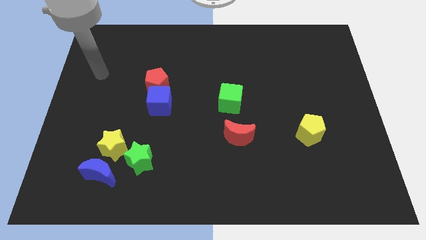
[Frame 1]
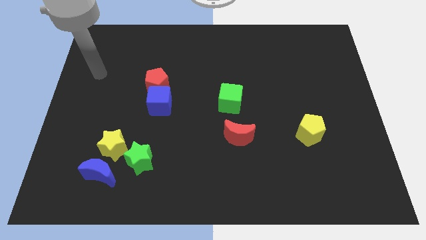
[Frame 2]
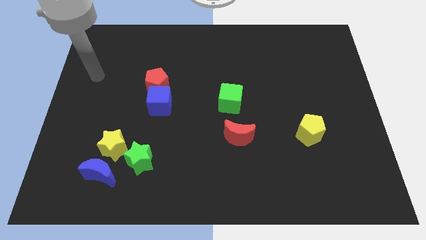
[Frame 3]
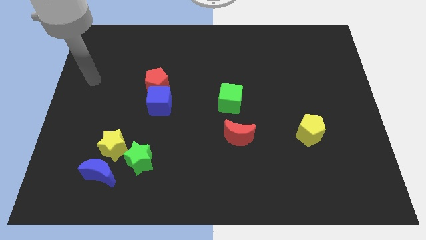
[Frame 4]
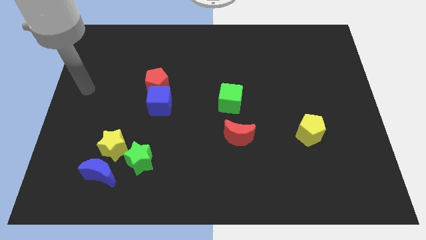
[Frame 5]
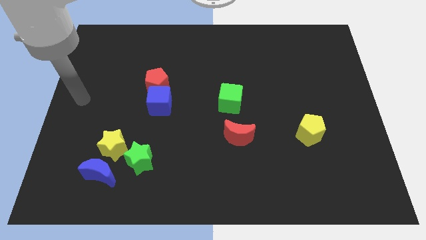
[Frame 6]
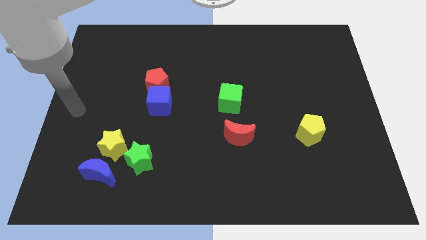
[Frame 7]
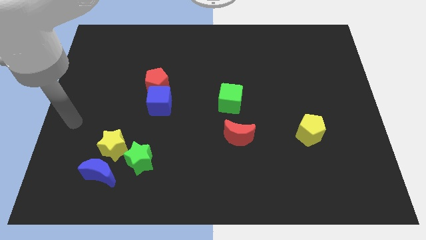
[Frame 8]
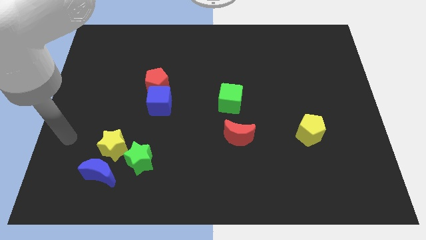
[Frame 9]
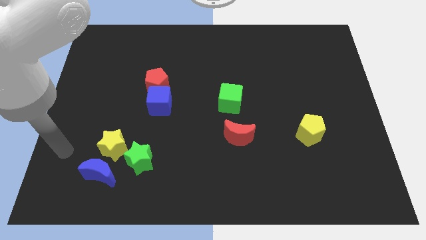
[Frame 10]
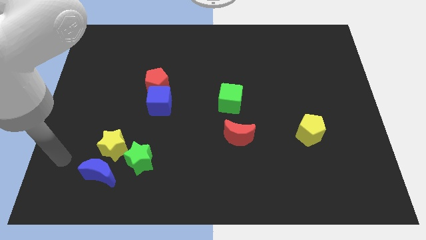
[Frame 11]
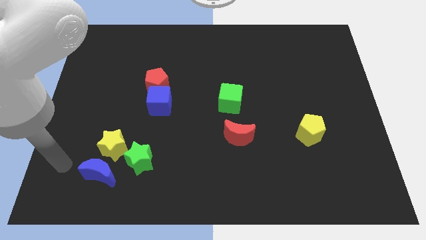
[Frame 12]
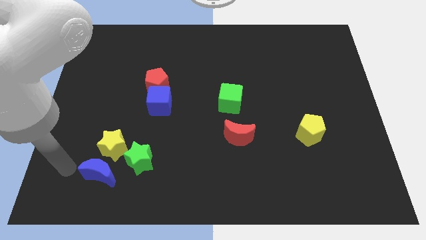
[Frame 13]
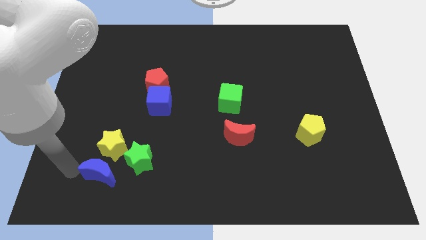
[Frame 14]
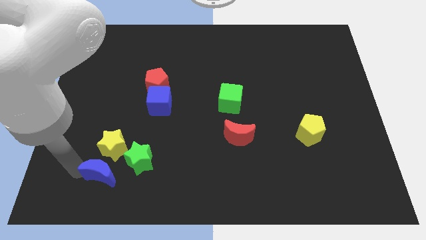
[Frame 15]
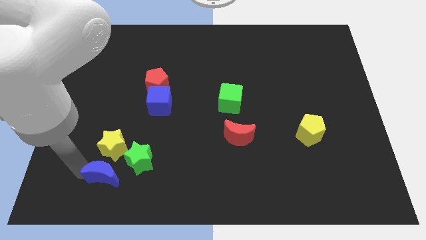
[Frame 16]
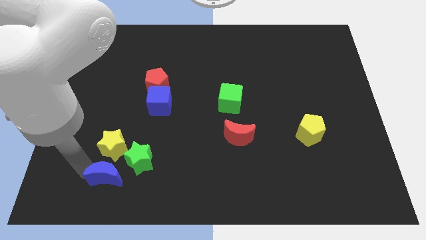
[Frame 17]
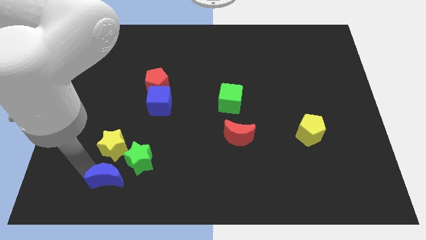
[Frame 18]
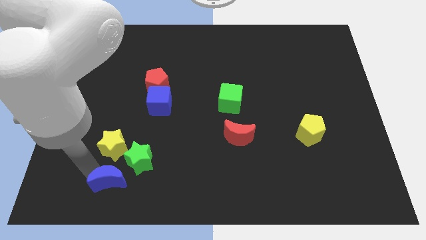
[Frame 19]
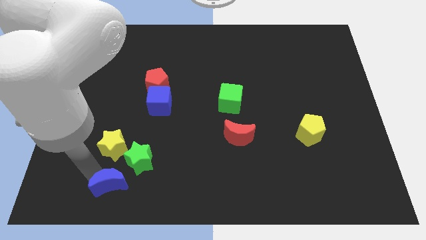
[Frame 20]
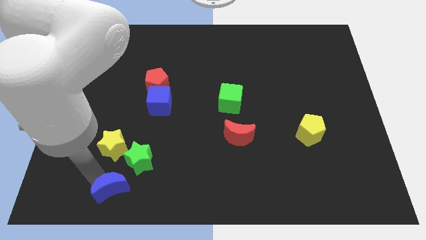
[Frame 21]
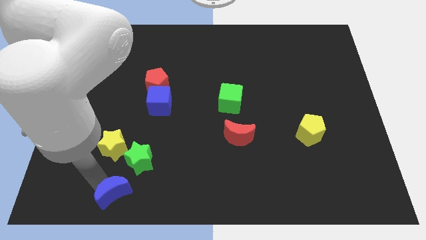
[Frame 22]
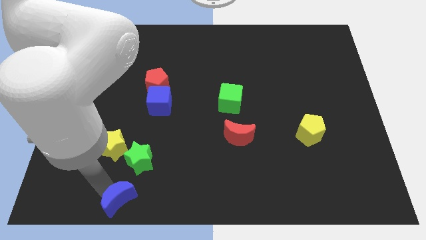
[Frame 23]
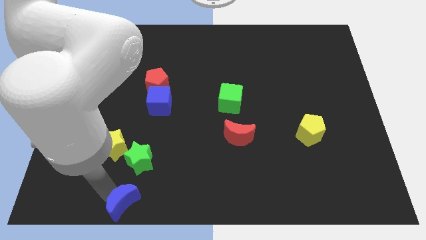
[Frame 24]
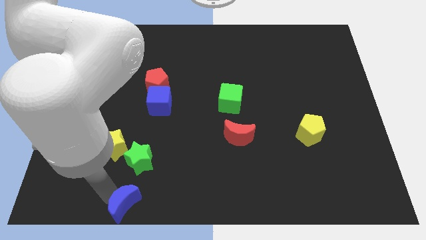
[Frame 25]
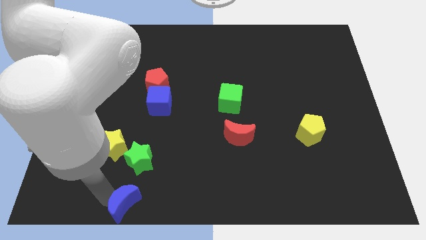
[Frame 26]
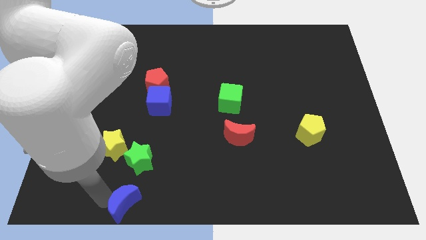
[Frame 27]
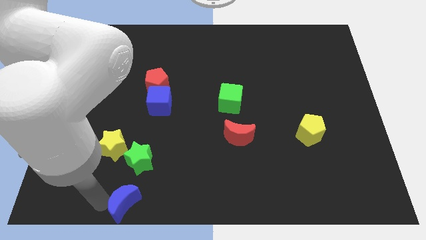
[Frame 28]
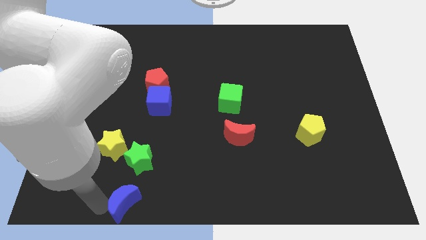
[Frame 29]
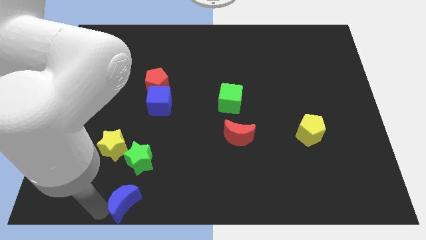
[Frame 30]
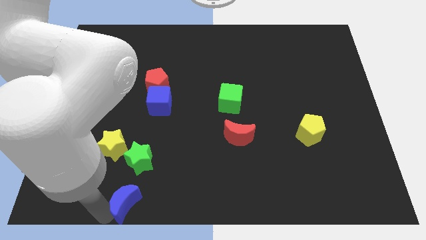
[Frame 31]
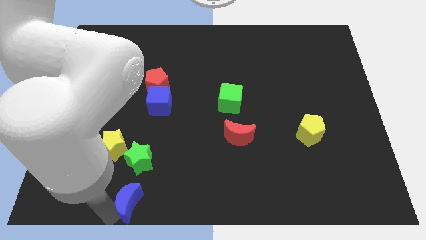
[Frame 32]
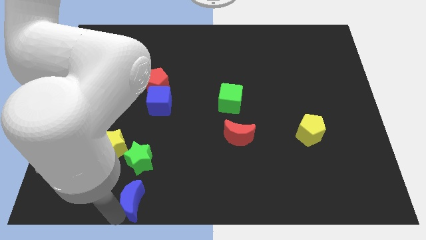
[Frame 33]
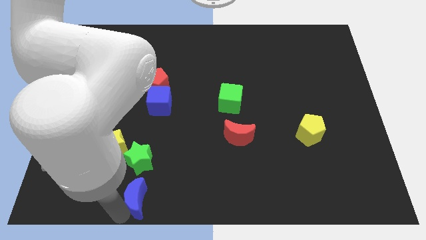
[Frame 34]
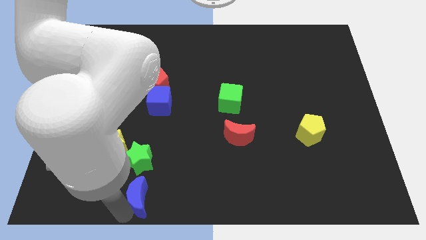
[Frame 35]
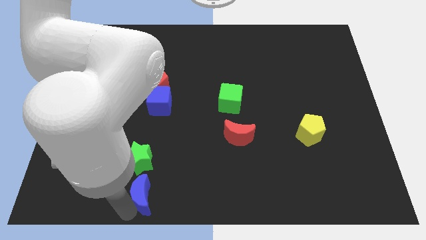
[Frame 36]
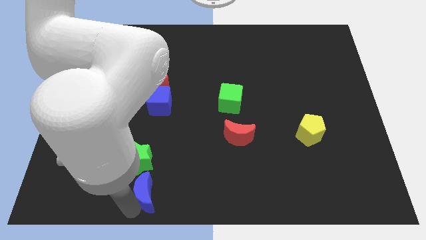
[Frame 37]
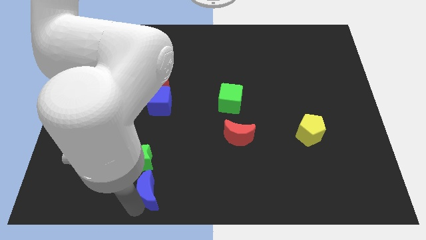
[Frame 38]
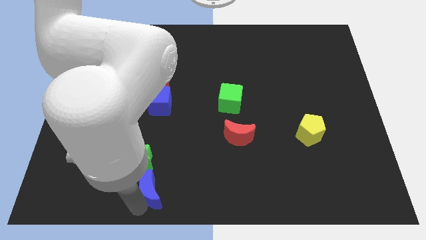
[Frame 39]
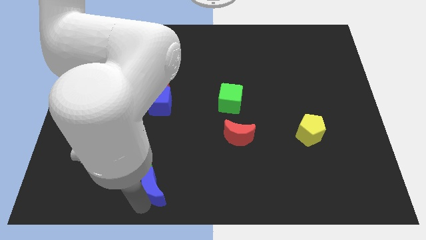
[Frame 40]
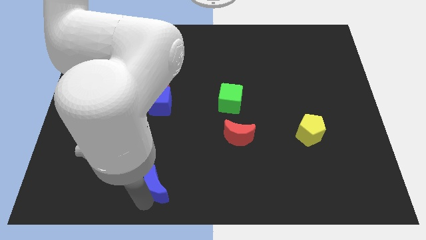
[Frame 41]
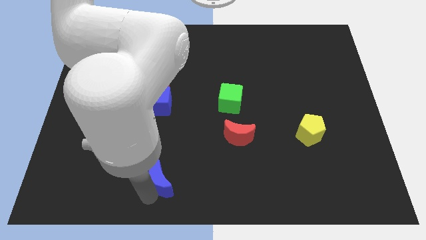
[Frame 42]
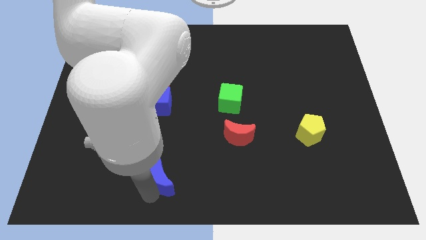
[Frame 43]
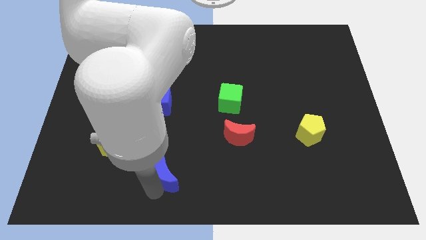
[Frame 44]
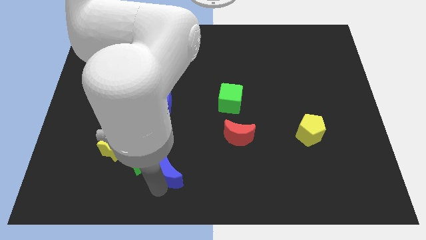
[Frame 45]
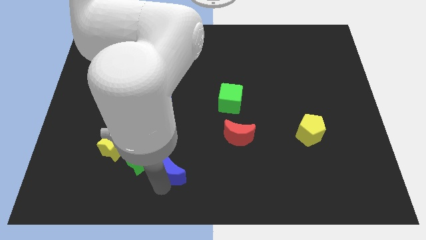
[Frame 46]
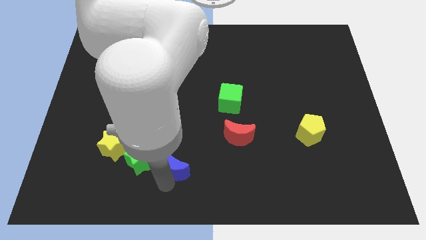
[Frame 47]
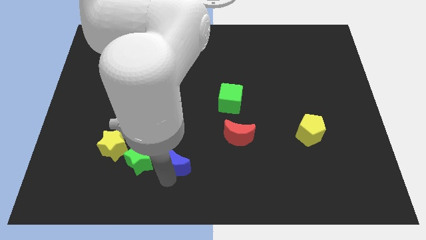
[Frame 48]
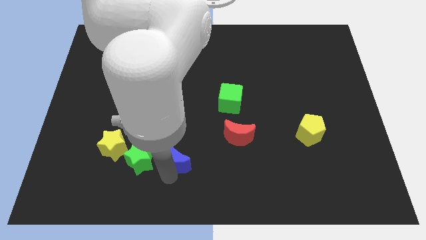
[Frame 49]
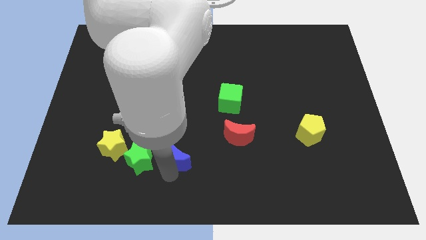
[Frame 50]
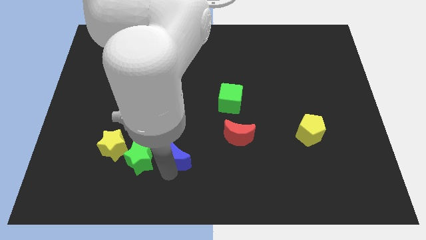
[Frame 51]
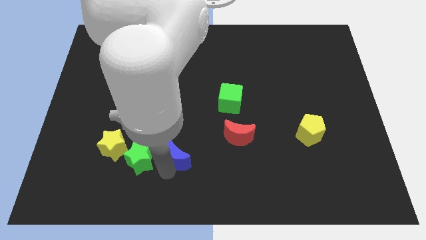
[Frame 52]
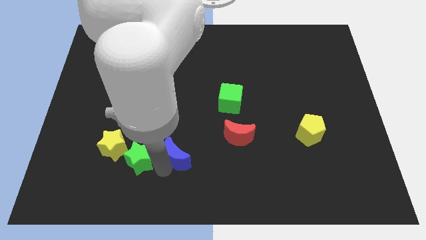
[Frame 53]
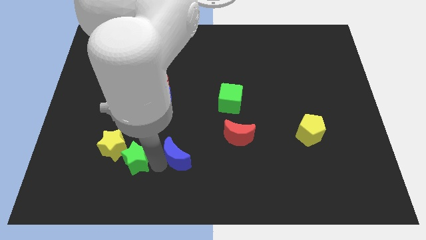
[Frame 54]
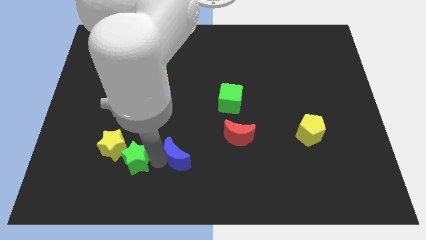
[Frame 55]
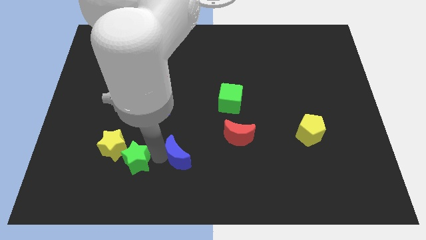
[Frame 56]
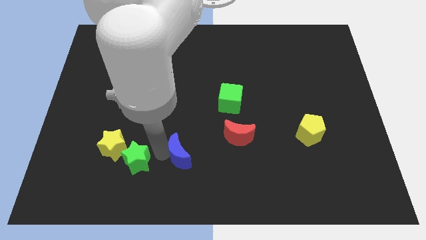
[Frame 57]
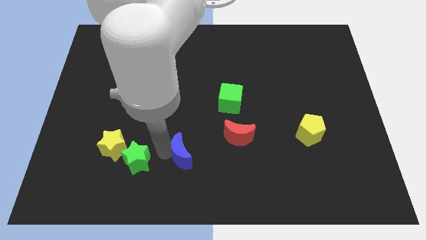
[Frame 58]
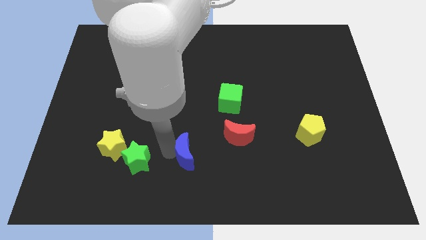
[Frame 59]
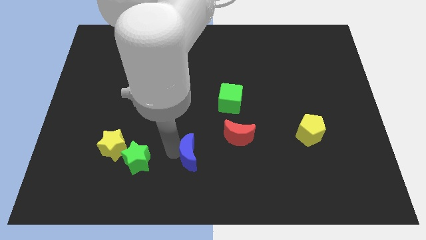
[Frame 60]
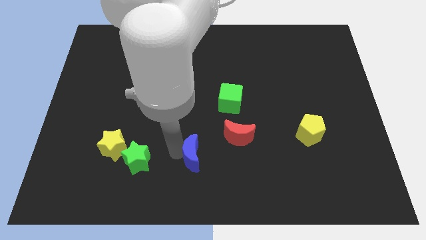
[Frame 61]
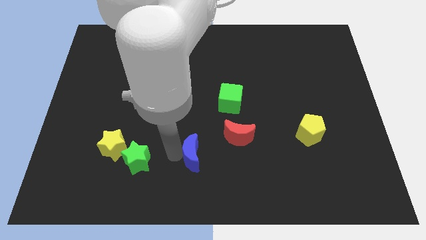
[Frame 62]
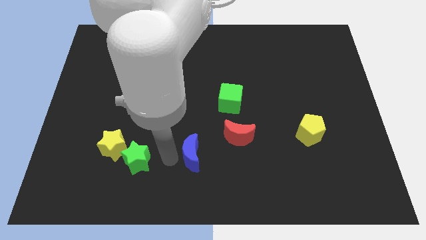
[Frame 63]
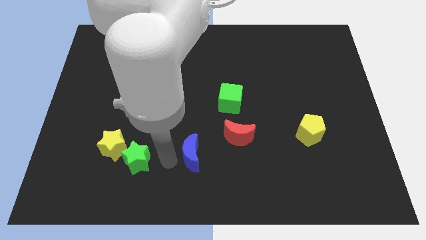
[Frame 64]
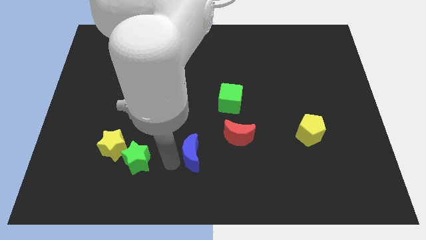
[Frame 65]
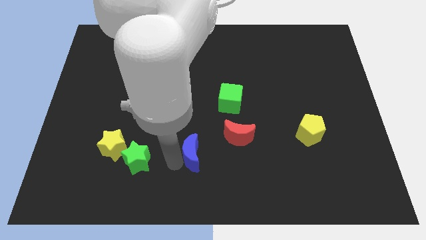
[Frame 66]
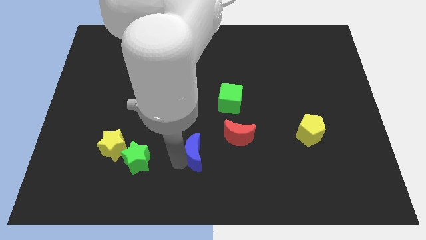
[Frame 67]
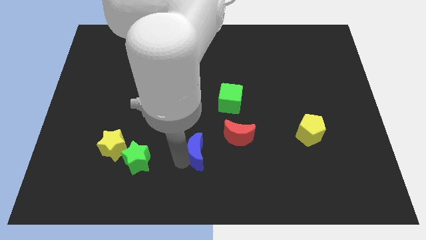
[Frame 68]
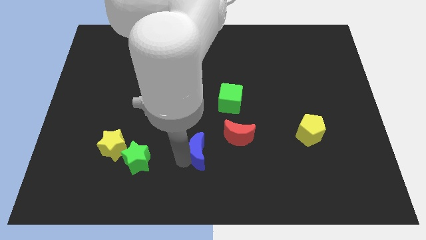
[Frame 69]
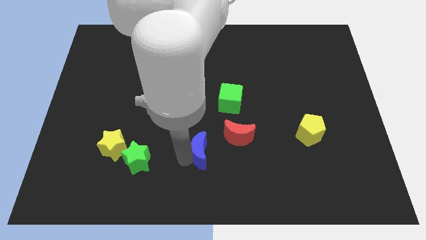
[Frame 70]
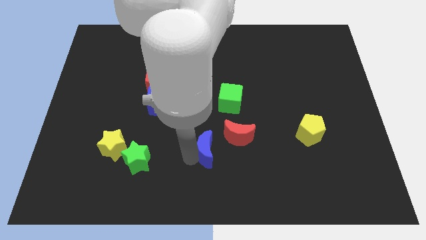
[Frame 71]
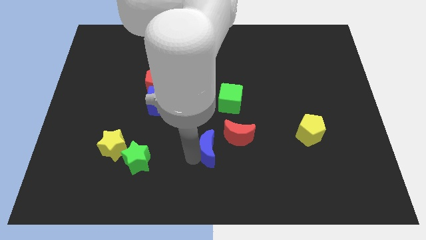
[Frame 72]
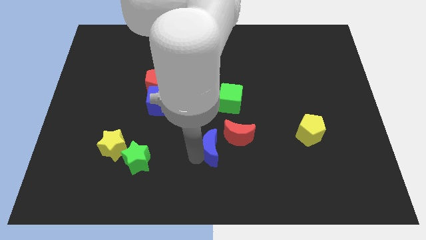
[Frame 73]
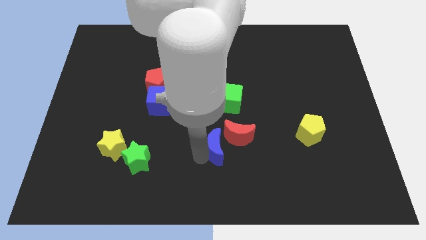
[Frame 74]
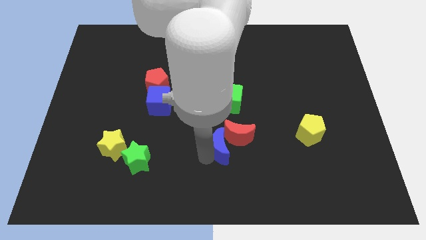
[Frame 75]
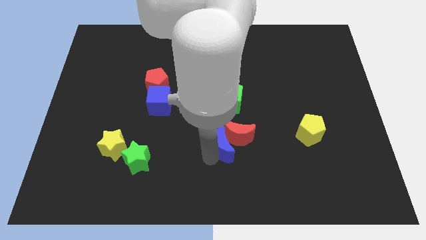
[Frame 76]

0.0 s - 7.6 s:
move the blue moon to the red moon

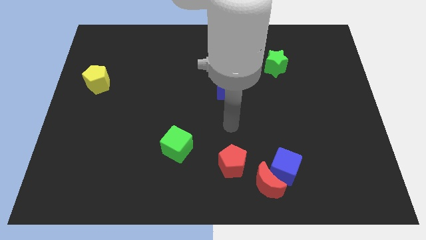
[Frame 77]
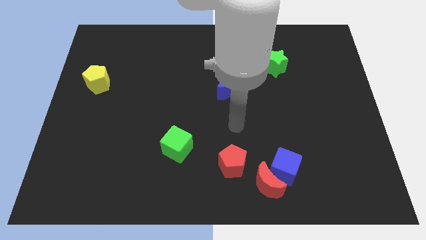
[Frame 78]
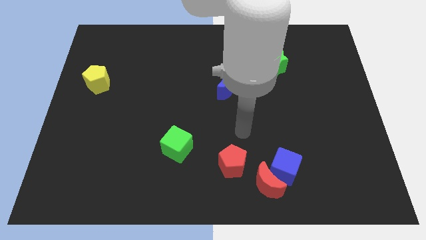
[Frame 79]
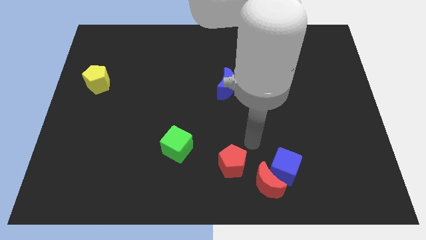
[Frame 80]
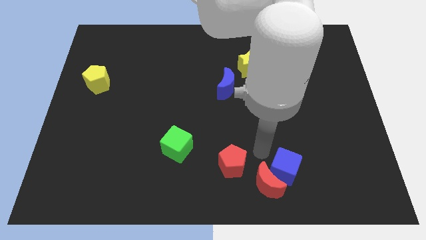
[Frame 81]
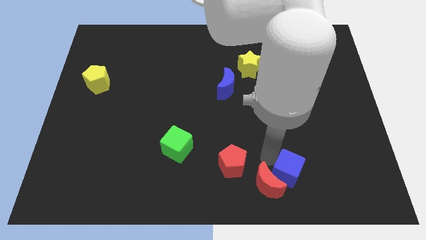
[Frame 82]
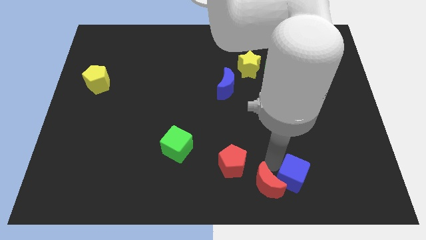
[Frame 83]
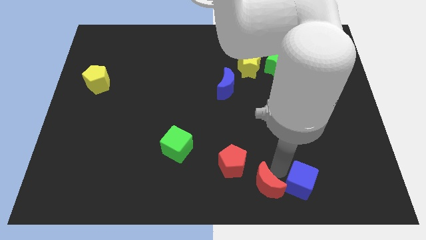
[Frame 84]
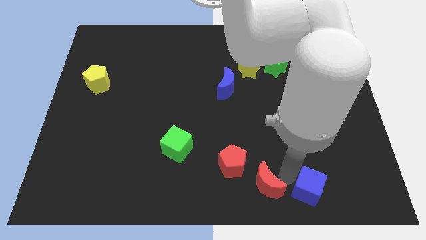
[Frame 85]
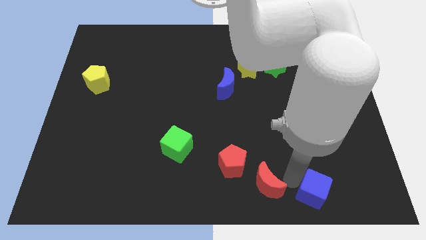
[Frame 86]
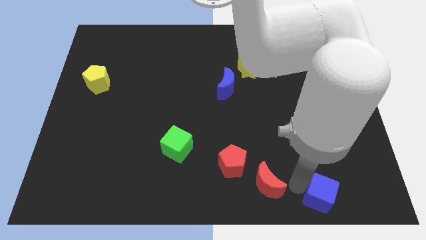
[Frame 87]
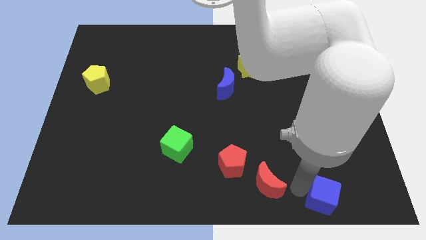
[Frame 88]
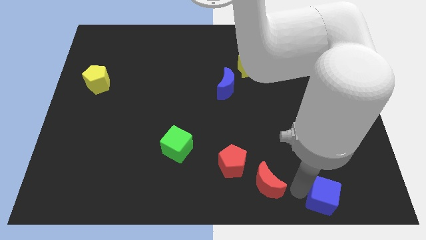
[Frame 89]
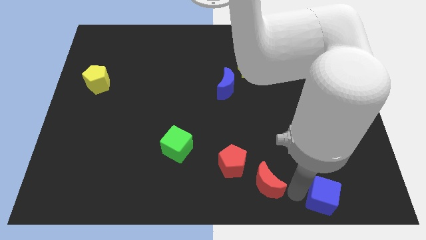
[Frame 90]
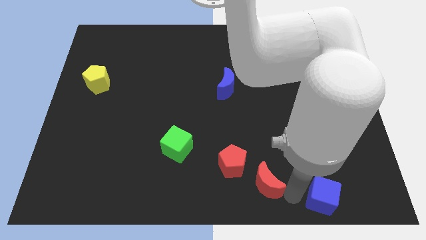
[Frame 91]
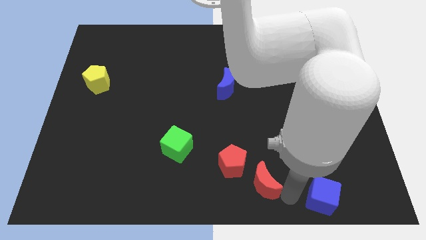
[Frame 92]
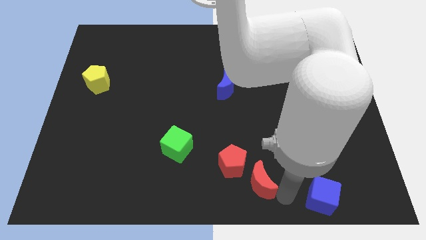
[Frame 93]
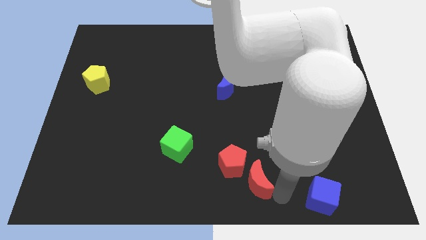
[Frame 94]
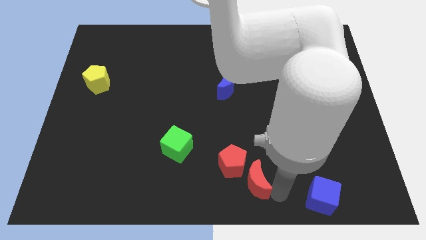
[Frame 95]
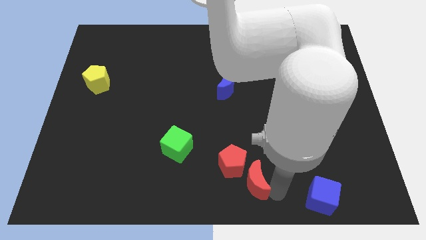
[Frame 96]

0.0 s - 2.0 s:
slide the red moon close to the red pentagon
